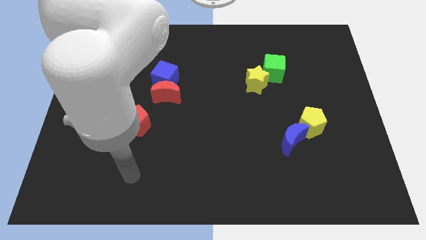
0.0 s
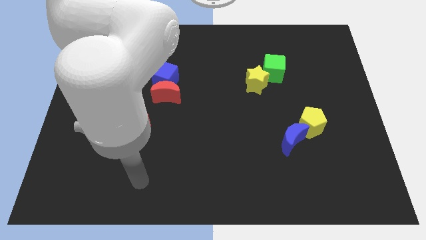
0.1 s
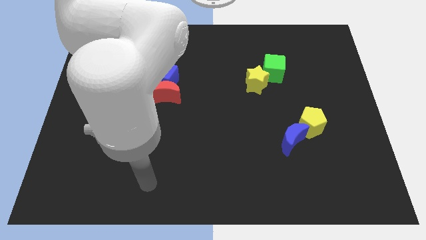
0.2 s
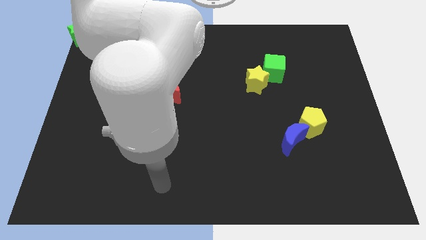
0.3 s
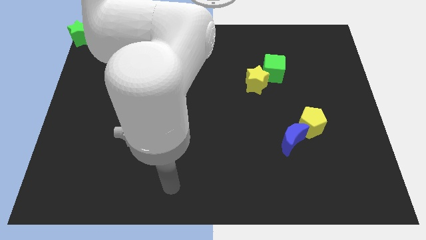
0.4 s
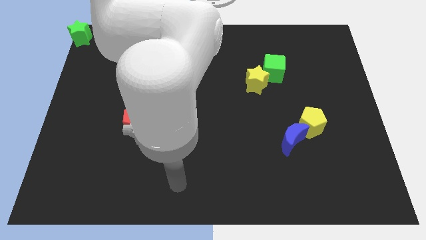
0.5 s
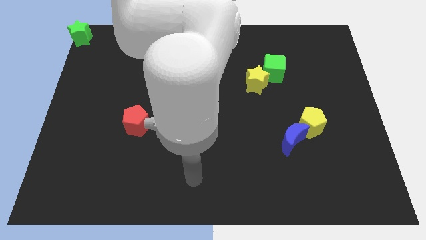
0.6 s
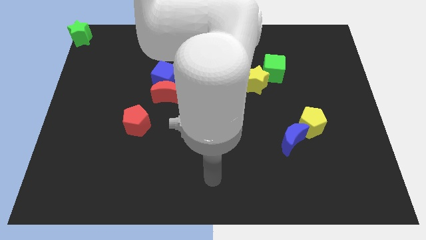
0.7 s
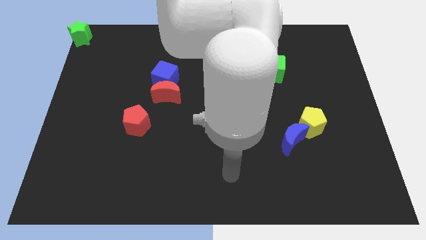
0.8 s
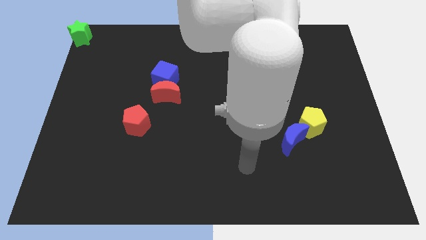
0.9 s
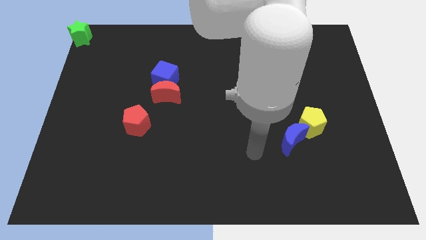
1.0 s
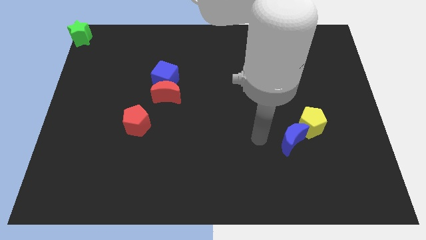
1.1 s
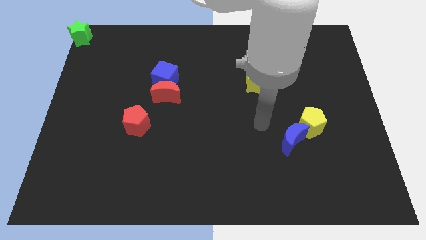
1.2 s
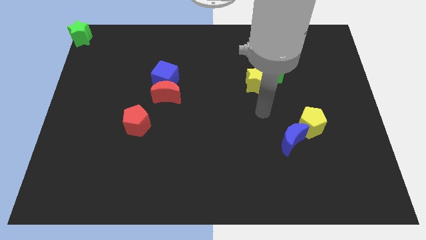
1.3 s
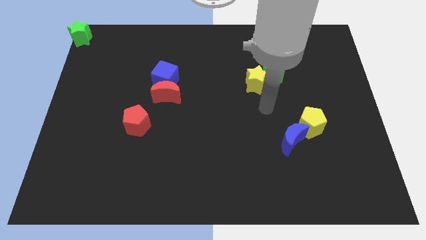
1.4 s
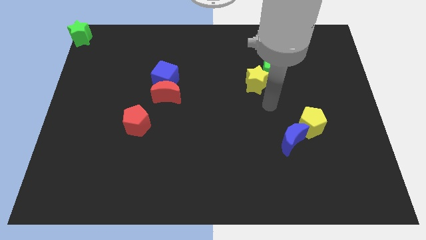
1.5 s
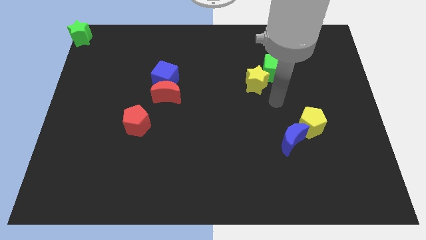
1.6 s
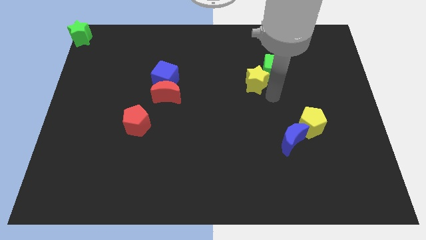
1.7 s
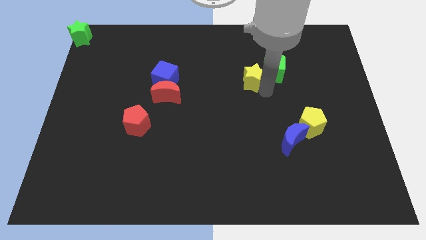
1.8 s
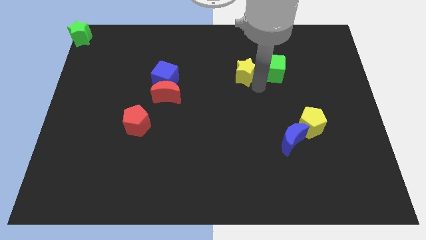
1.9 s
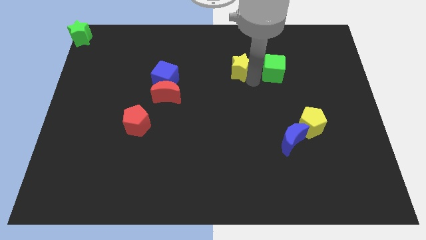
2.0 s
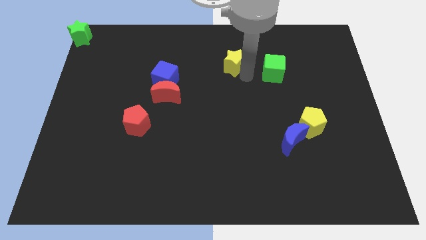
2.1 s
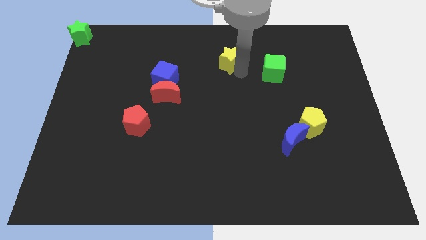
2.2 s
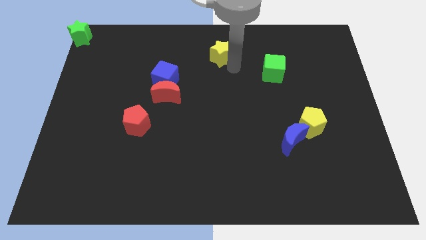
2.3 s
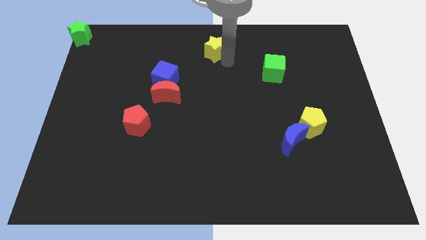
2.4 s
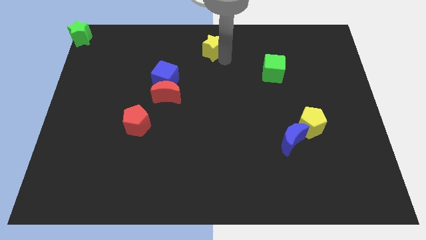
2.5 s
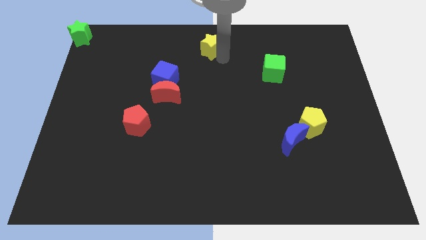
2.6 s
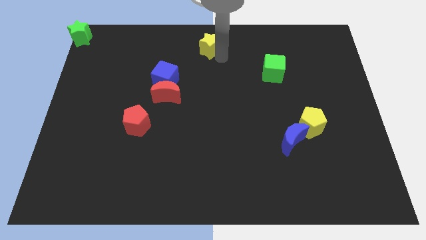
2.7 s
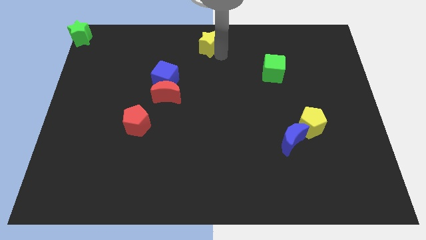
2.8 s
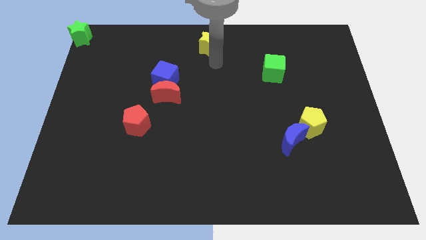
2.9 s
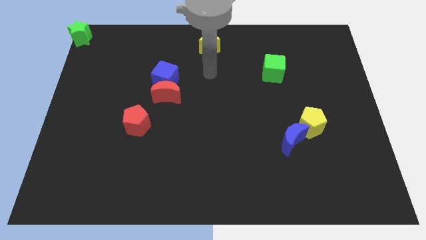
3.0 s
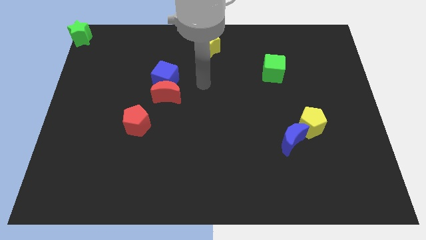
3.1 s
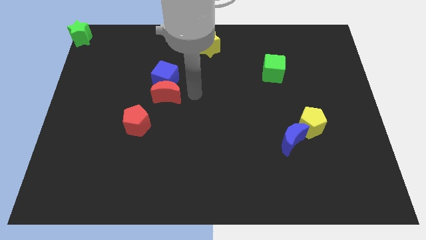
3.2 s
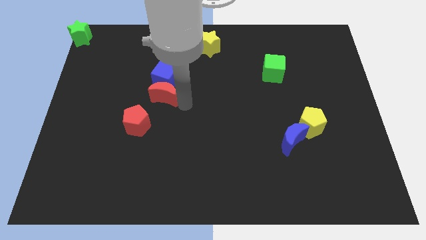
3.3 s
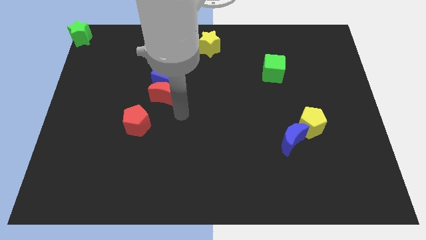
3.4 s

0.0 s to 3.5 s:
place the yellow star in the top middle

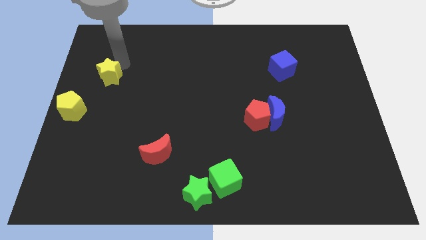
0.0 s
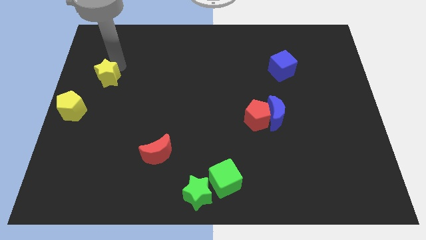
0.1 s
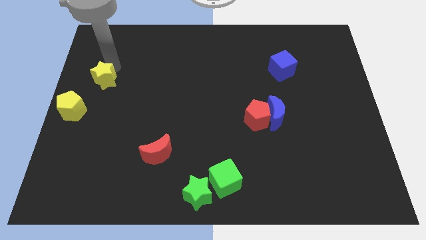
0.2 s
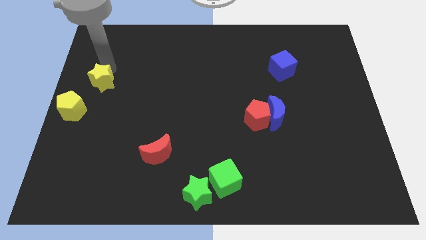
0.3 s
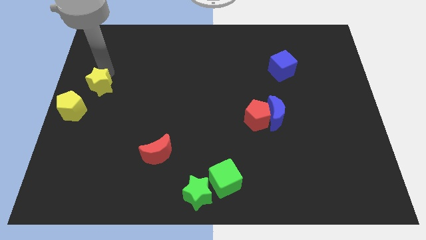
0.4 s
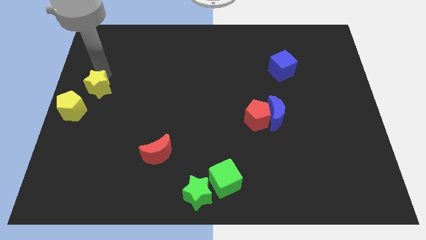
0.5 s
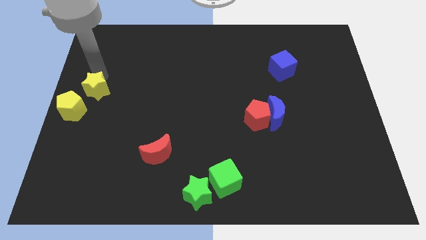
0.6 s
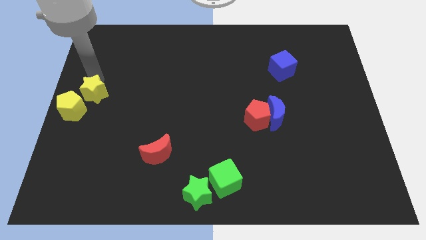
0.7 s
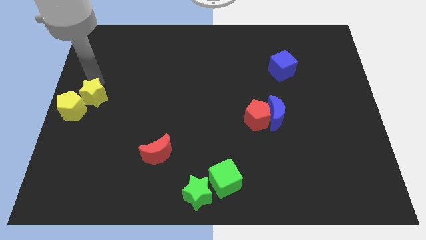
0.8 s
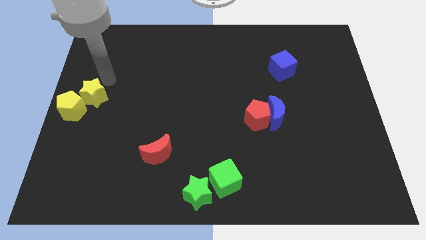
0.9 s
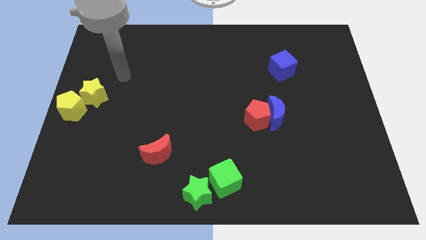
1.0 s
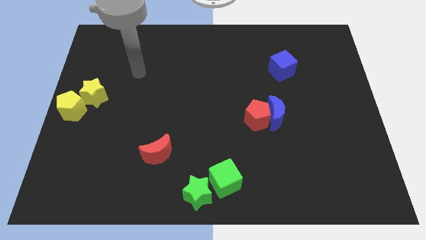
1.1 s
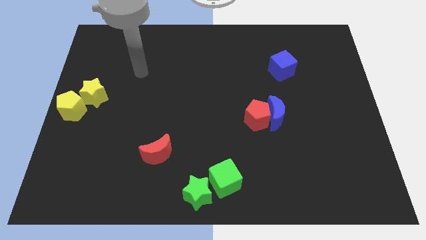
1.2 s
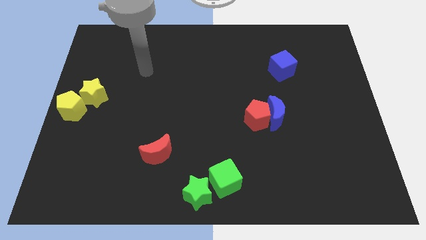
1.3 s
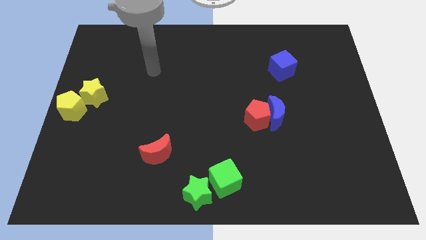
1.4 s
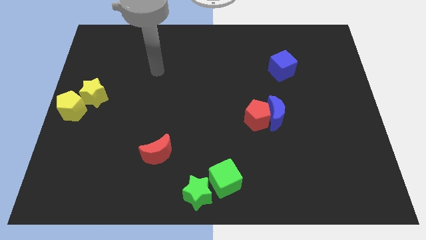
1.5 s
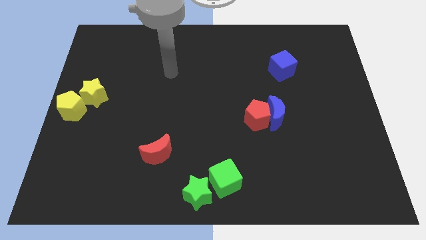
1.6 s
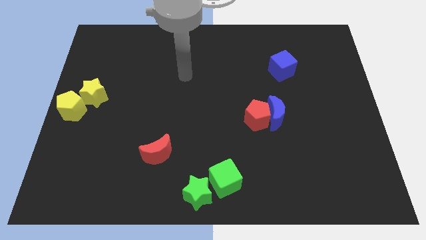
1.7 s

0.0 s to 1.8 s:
place the yellow star at the center left of the board

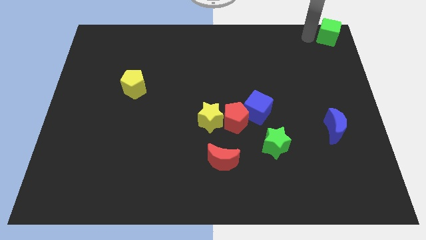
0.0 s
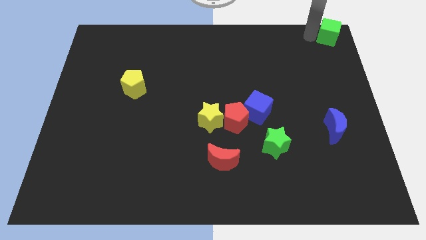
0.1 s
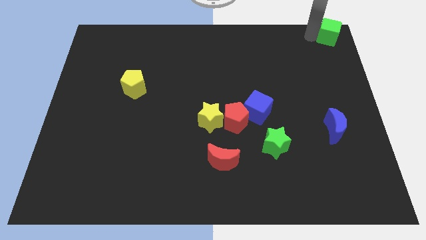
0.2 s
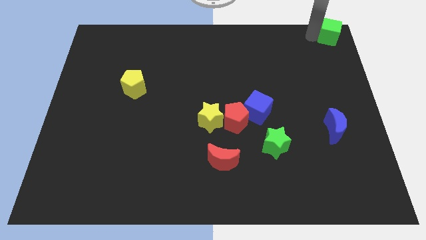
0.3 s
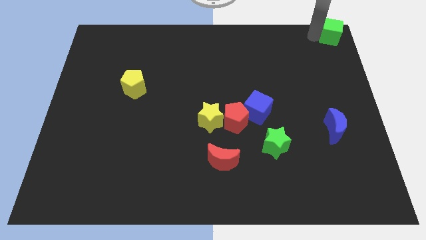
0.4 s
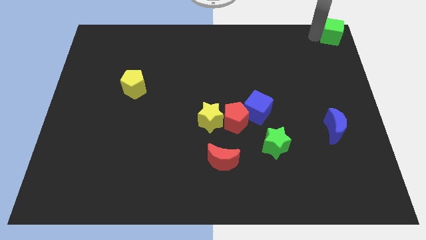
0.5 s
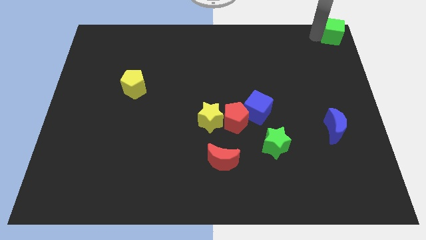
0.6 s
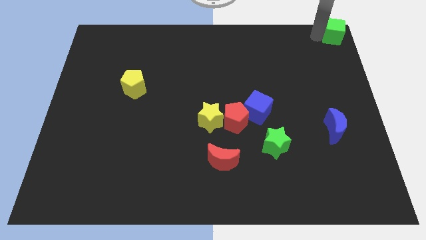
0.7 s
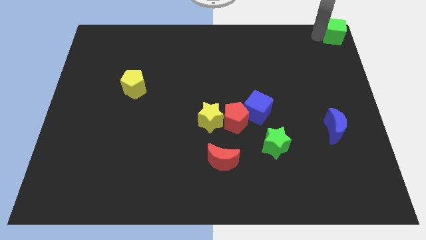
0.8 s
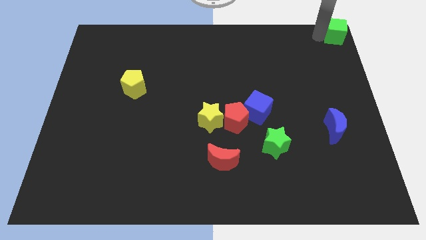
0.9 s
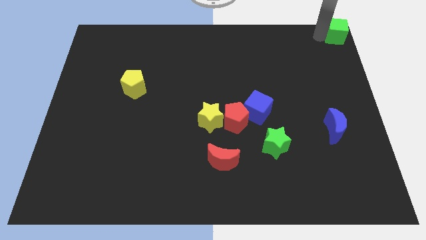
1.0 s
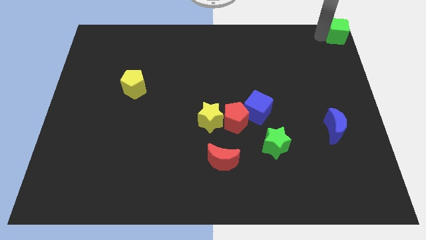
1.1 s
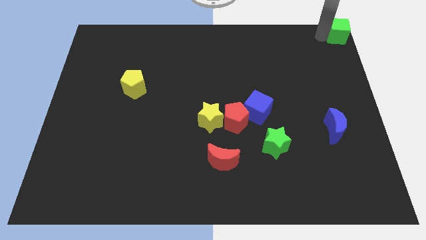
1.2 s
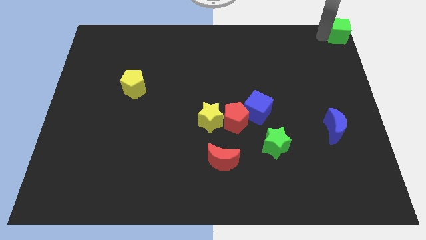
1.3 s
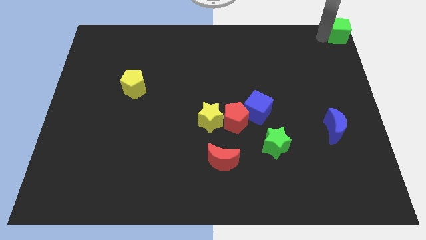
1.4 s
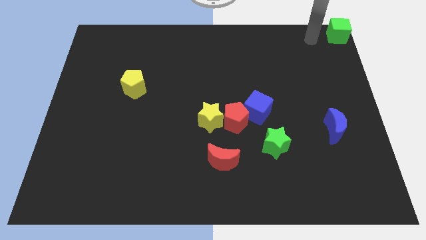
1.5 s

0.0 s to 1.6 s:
place the green star at the top right corner of the board

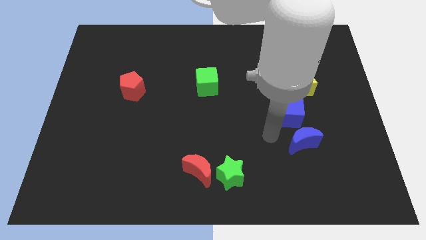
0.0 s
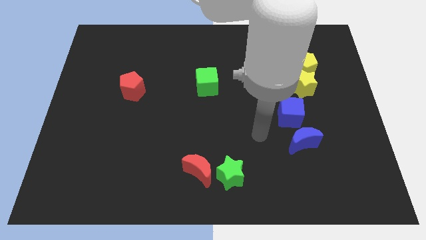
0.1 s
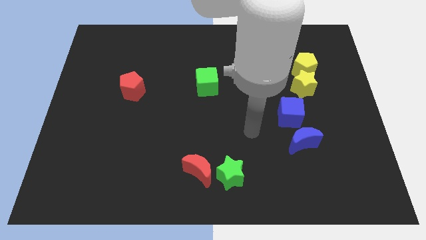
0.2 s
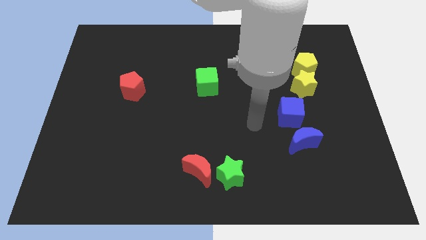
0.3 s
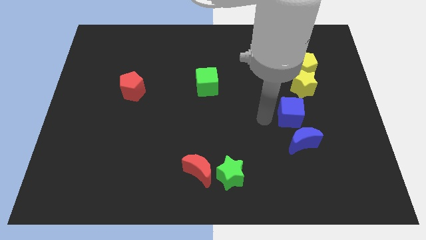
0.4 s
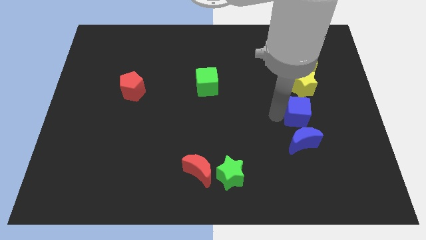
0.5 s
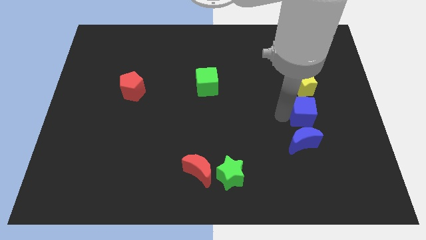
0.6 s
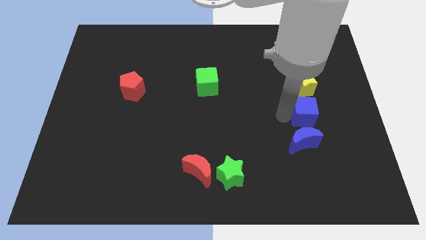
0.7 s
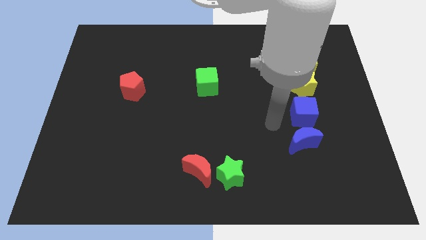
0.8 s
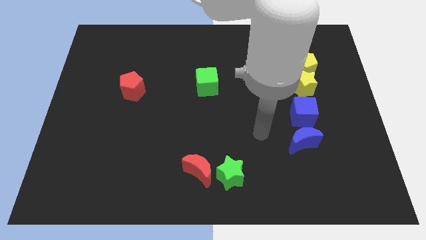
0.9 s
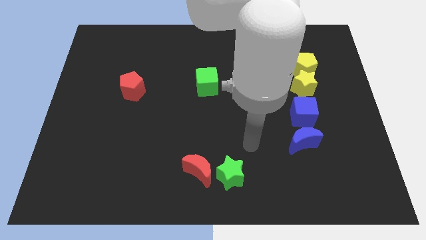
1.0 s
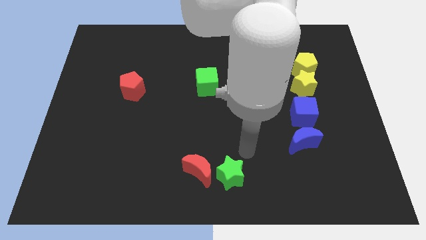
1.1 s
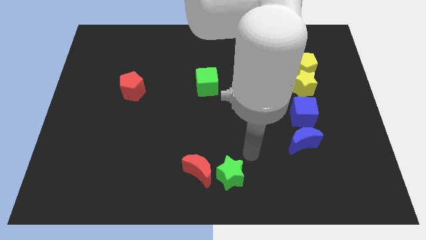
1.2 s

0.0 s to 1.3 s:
place blue cube to the bottom of yellow star

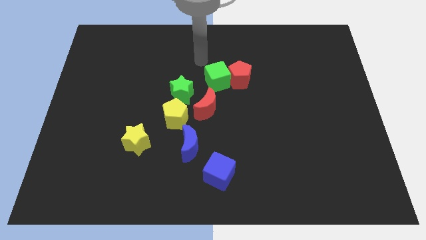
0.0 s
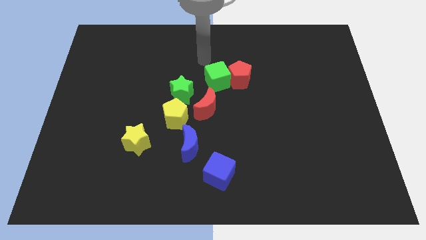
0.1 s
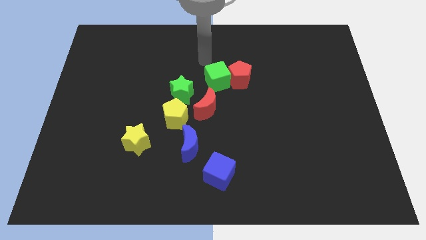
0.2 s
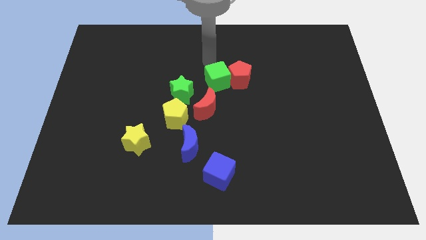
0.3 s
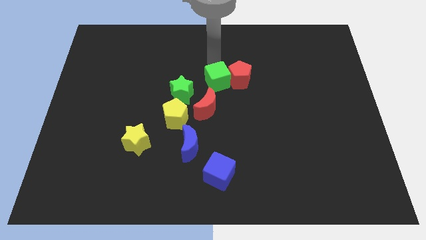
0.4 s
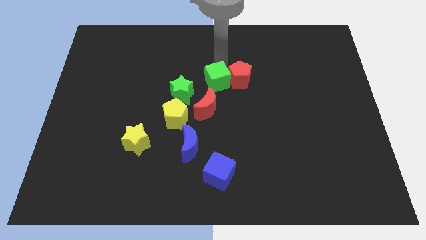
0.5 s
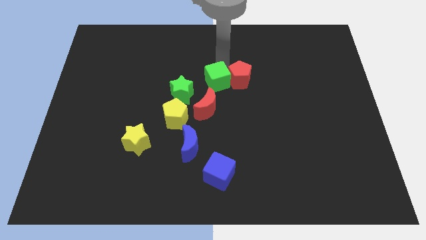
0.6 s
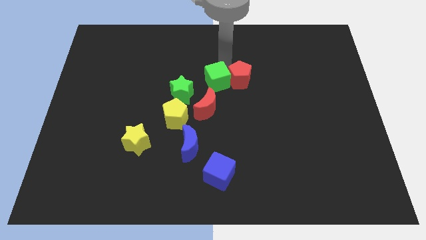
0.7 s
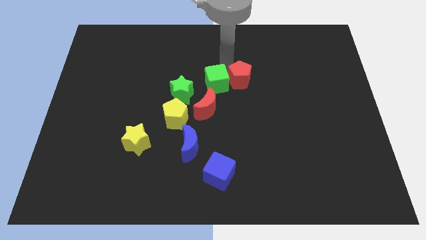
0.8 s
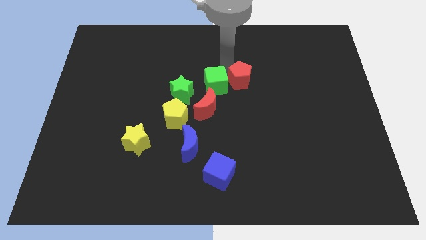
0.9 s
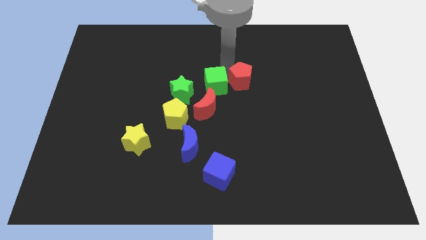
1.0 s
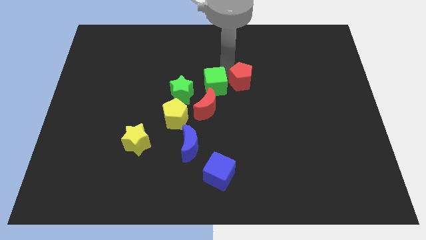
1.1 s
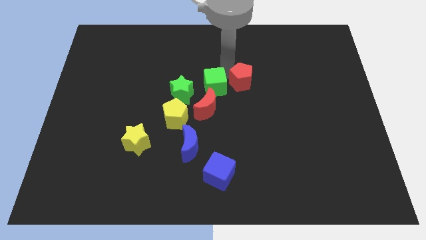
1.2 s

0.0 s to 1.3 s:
move the green cube slightly down
